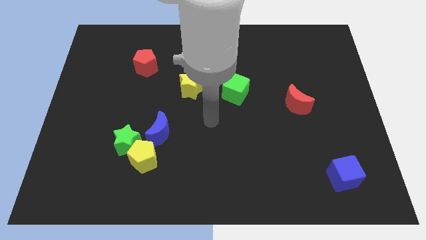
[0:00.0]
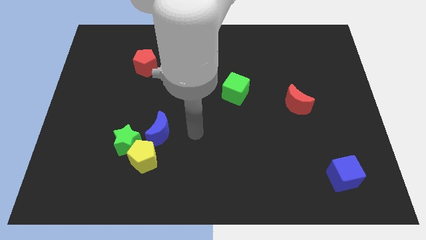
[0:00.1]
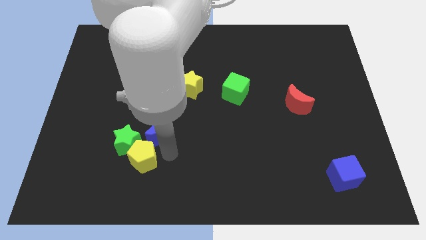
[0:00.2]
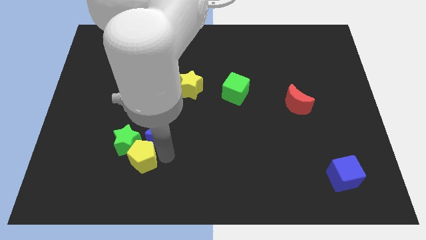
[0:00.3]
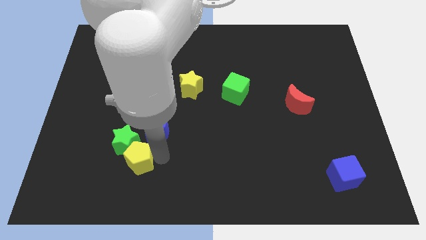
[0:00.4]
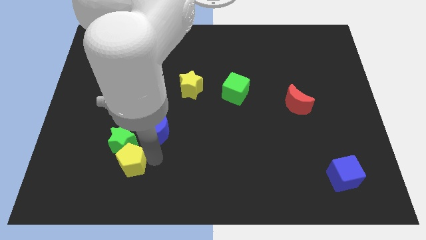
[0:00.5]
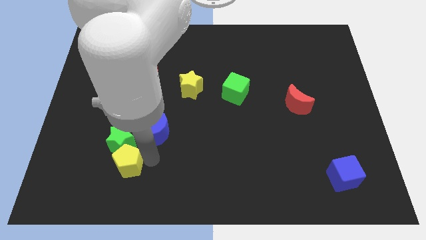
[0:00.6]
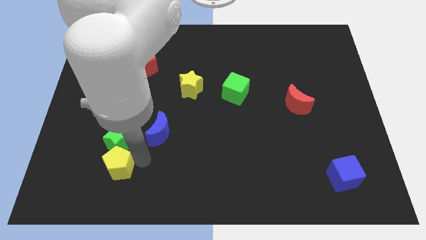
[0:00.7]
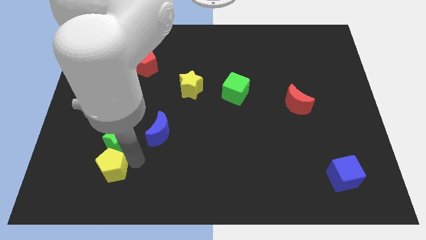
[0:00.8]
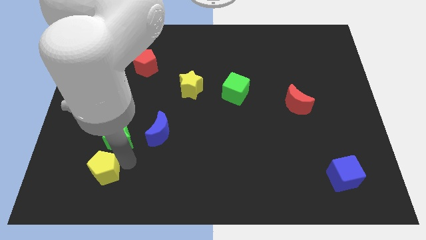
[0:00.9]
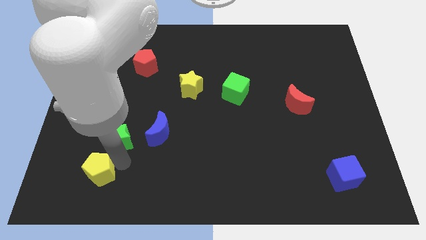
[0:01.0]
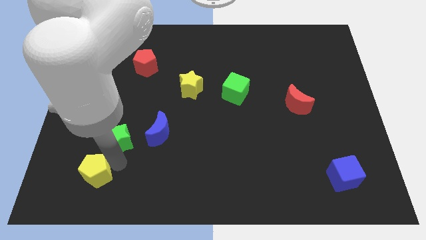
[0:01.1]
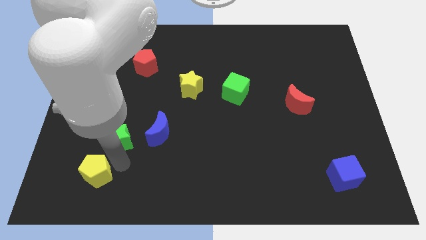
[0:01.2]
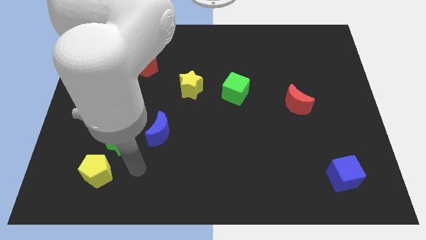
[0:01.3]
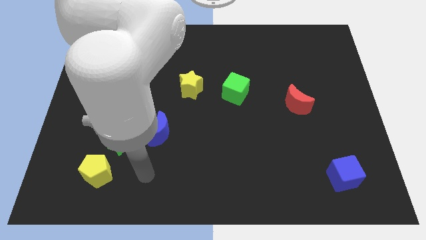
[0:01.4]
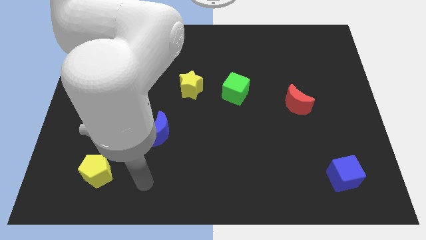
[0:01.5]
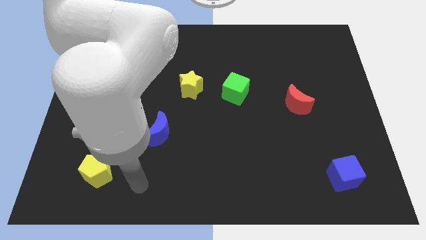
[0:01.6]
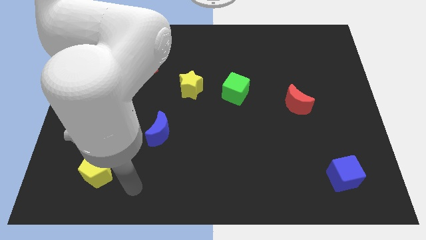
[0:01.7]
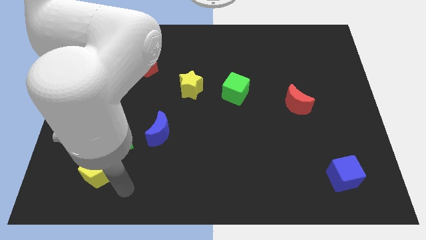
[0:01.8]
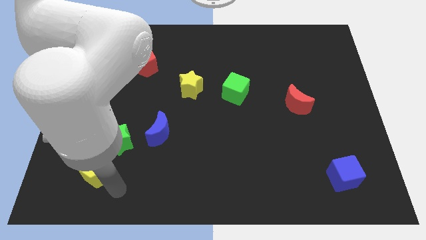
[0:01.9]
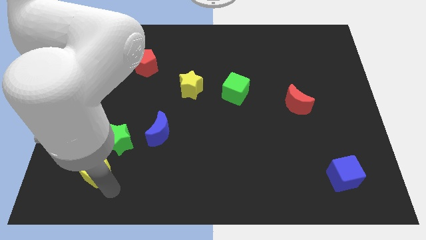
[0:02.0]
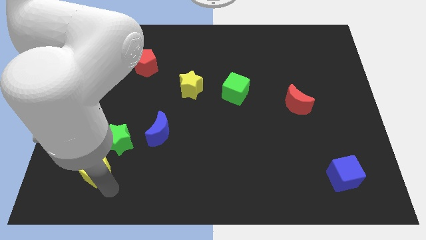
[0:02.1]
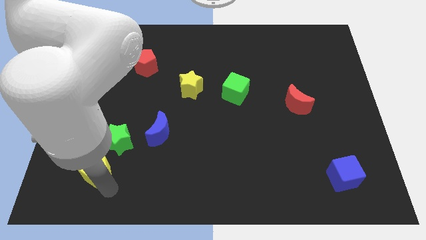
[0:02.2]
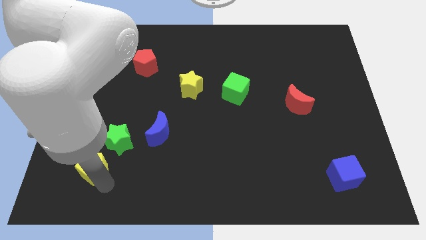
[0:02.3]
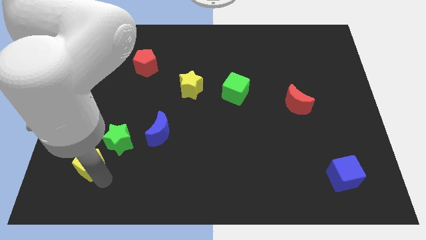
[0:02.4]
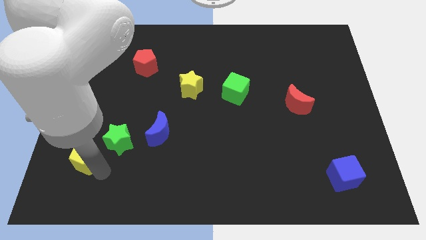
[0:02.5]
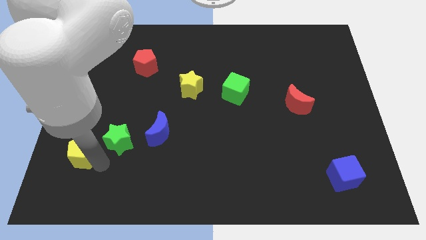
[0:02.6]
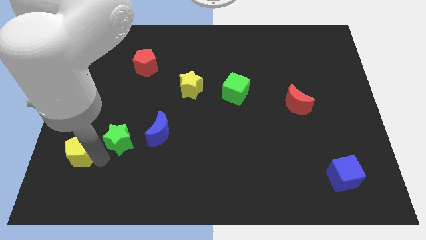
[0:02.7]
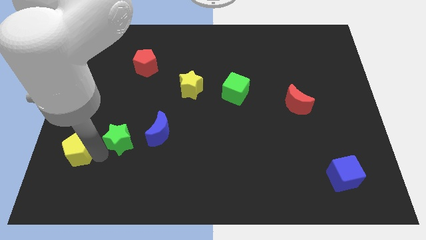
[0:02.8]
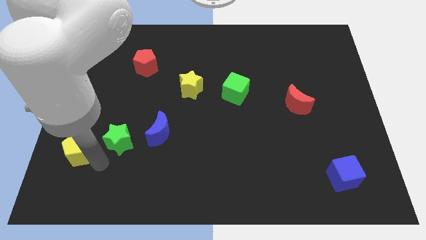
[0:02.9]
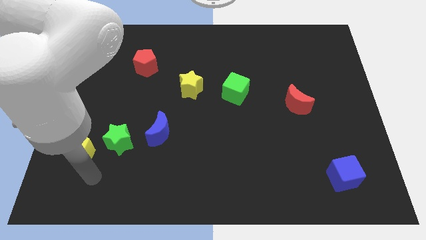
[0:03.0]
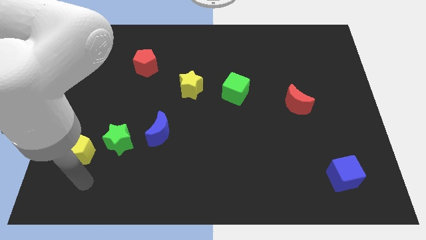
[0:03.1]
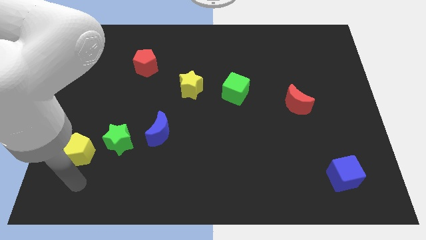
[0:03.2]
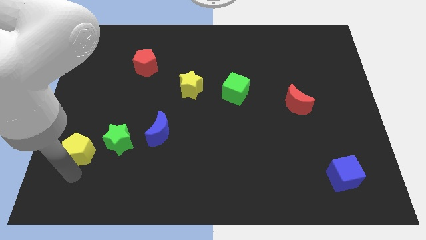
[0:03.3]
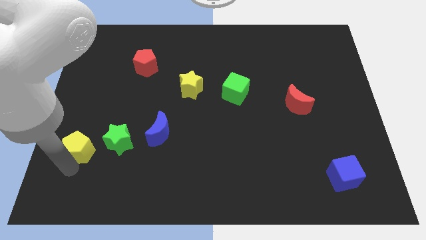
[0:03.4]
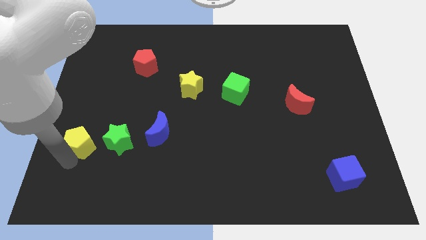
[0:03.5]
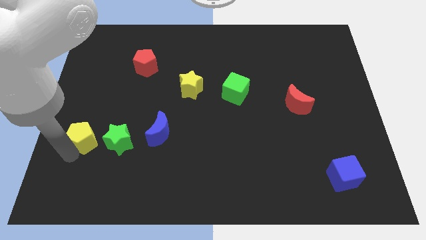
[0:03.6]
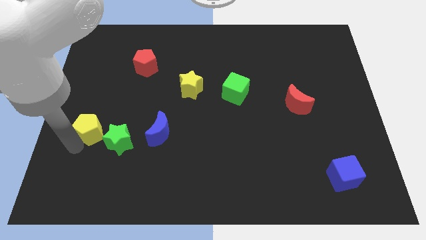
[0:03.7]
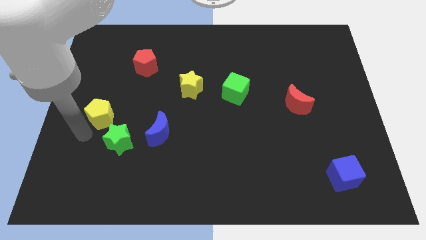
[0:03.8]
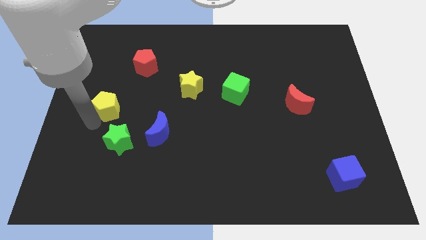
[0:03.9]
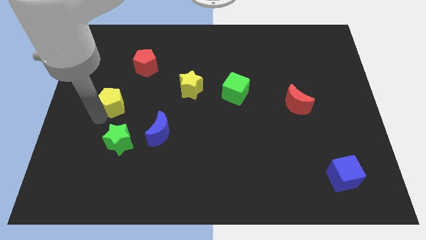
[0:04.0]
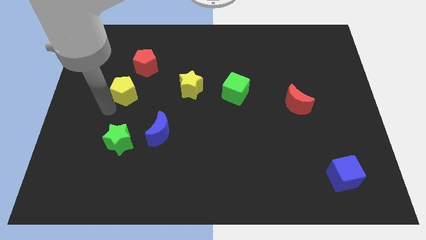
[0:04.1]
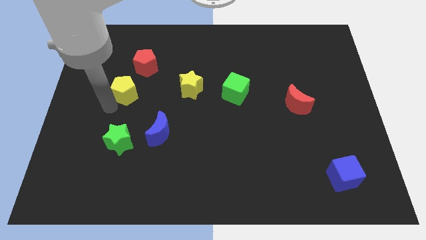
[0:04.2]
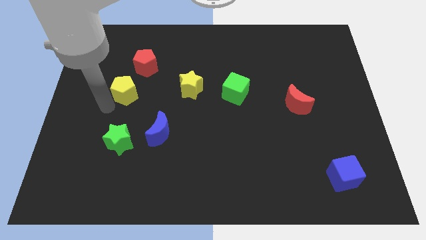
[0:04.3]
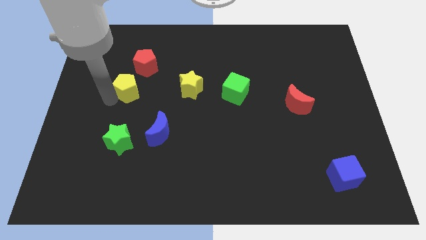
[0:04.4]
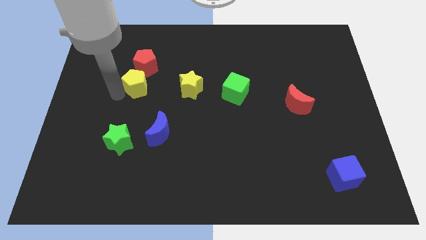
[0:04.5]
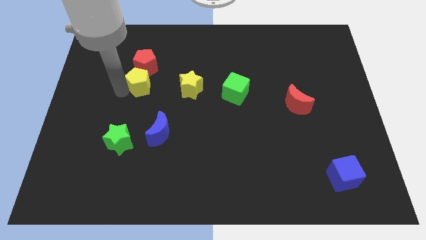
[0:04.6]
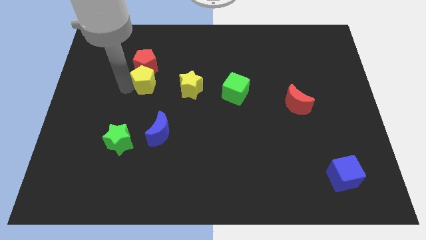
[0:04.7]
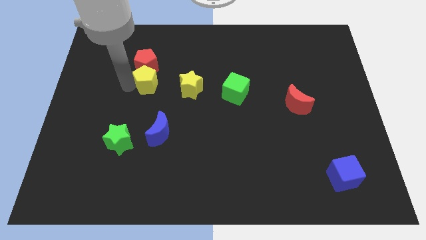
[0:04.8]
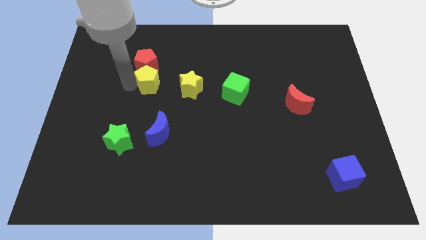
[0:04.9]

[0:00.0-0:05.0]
push the yellow pentagon to the red pentagon

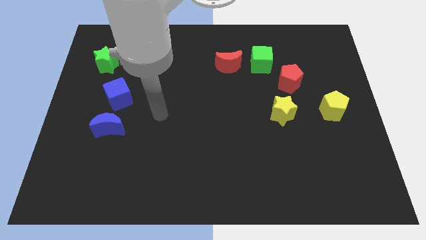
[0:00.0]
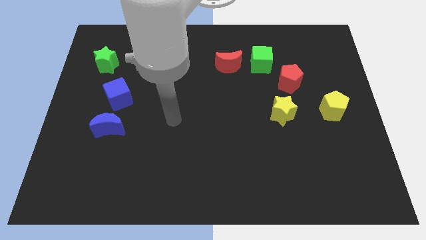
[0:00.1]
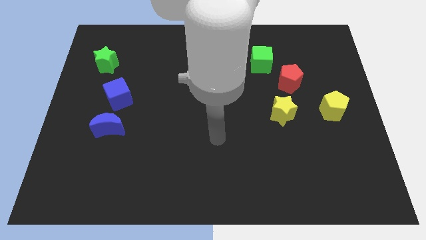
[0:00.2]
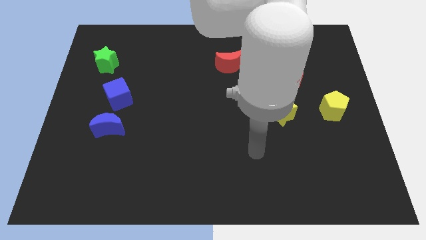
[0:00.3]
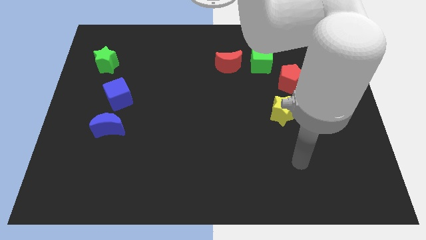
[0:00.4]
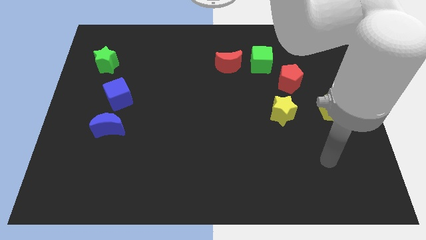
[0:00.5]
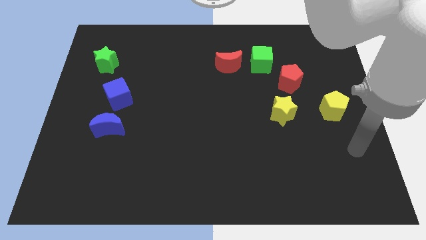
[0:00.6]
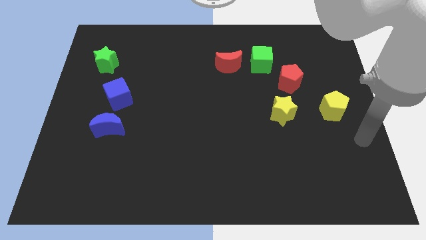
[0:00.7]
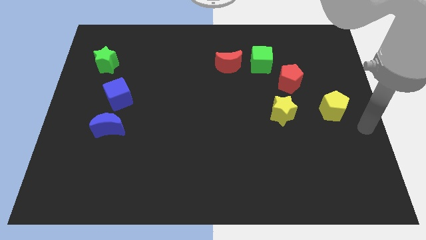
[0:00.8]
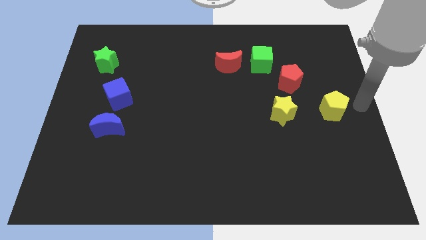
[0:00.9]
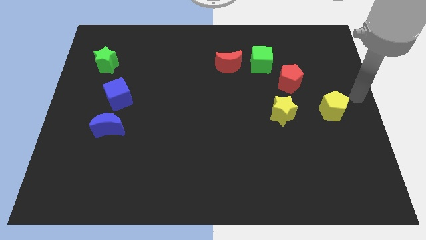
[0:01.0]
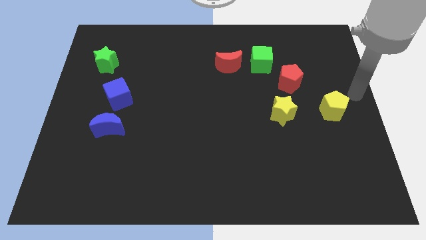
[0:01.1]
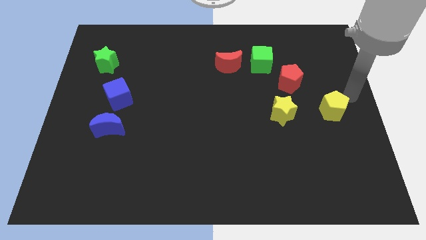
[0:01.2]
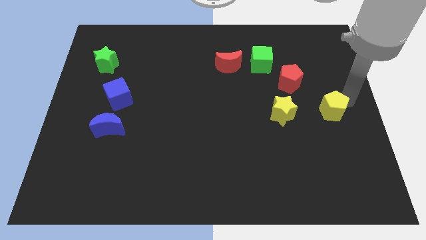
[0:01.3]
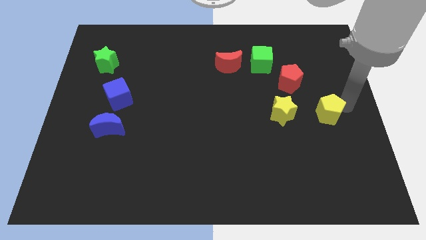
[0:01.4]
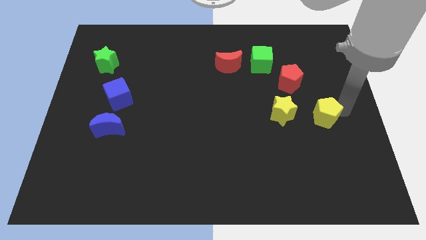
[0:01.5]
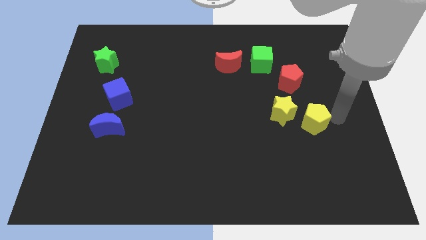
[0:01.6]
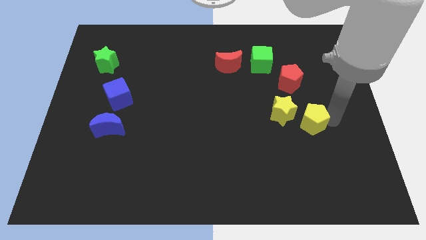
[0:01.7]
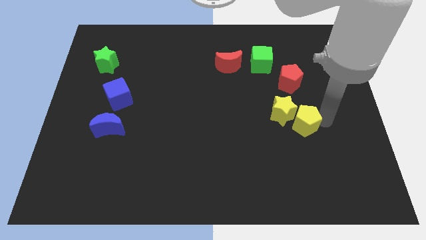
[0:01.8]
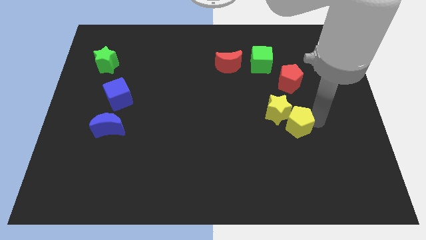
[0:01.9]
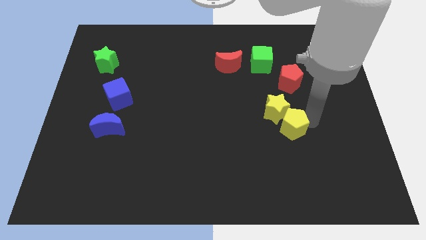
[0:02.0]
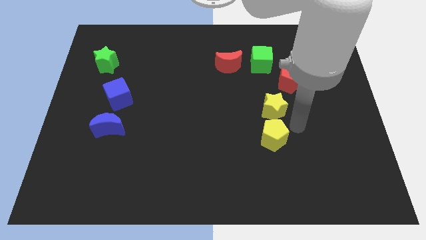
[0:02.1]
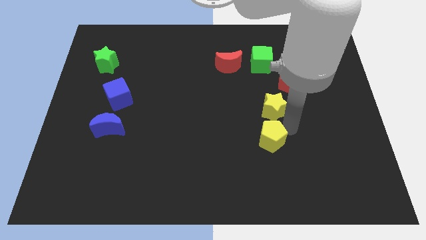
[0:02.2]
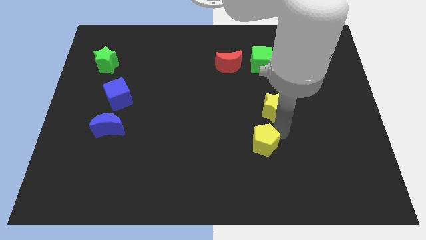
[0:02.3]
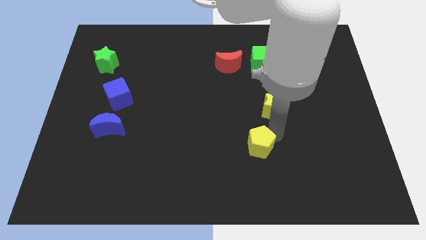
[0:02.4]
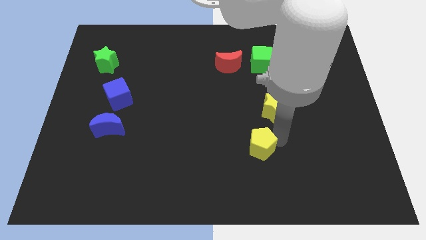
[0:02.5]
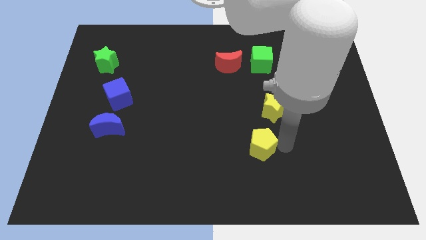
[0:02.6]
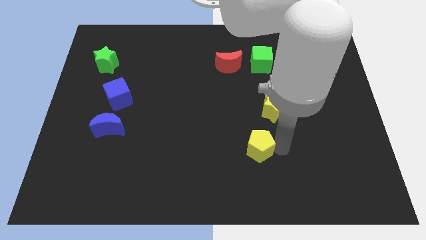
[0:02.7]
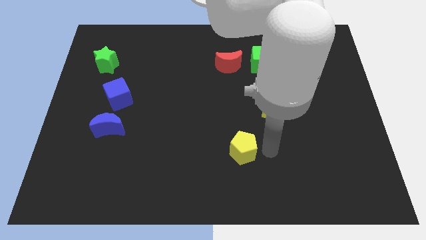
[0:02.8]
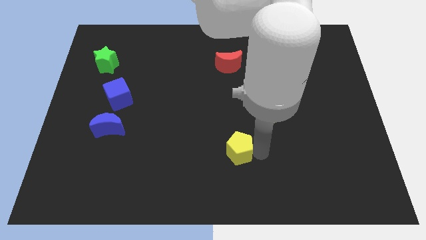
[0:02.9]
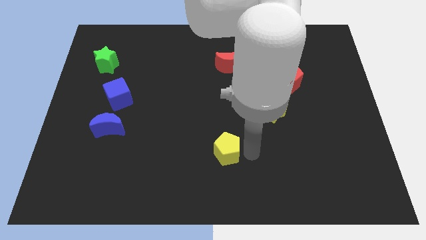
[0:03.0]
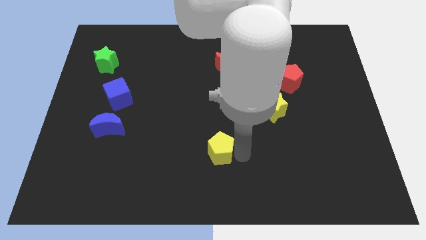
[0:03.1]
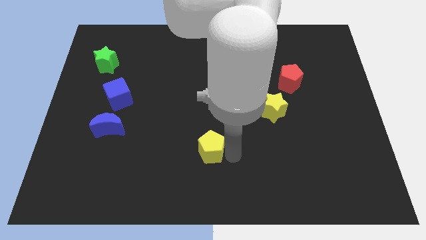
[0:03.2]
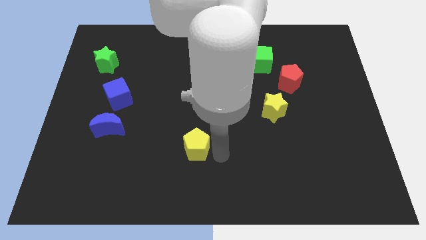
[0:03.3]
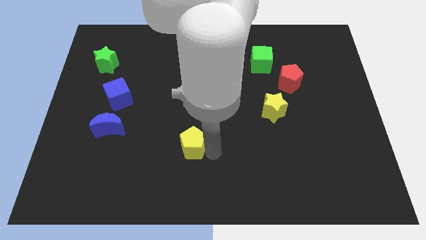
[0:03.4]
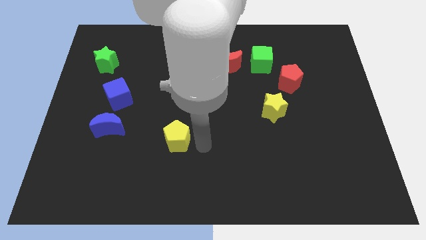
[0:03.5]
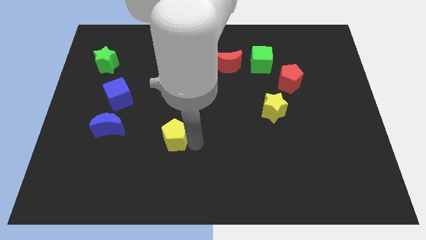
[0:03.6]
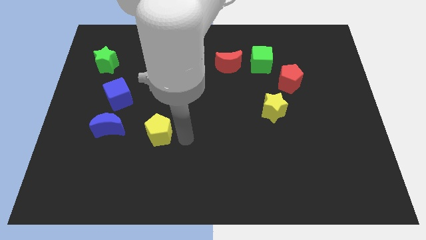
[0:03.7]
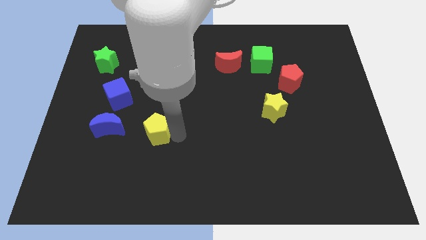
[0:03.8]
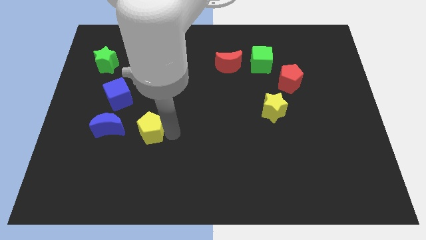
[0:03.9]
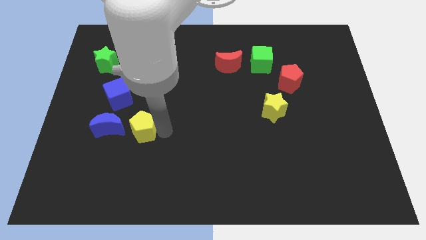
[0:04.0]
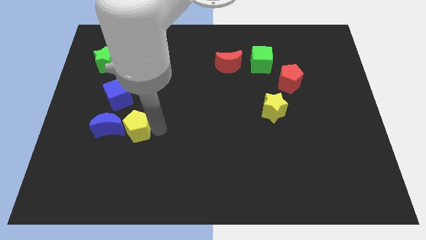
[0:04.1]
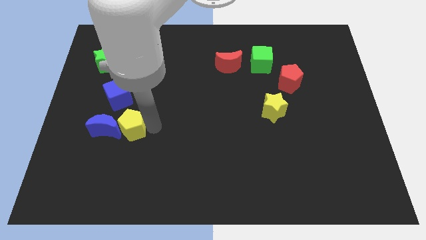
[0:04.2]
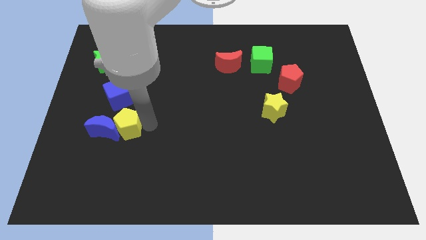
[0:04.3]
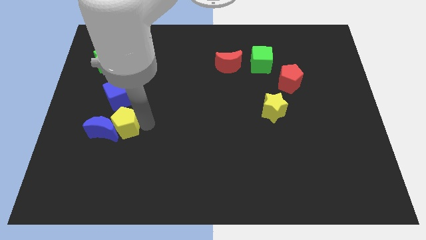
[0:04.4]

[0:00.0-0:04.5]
push the yellow pentagon next to the blue moon
